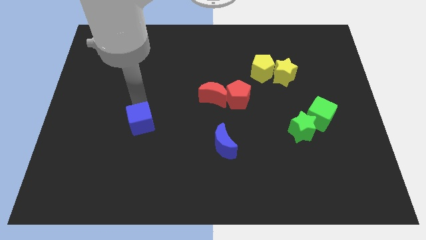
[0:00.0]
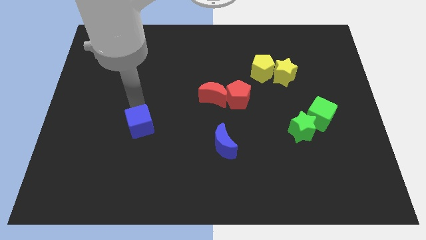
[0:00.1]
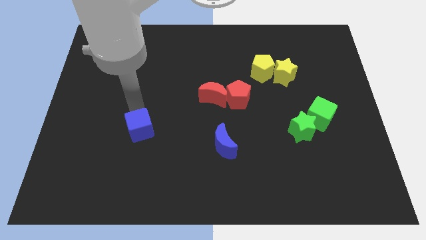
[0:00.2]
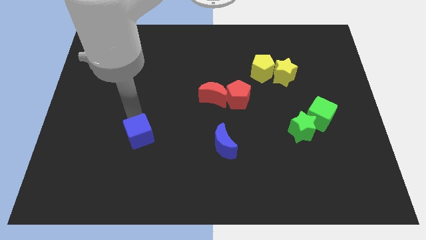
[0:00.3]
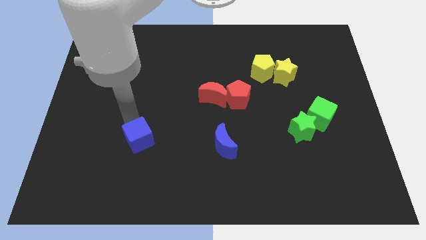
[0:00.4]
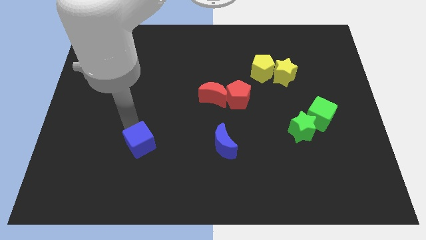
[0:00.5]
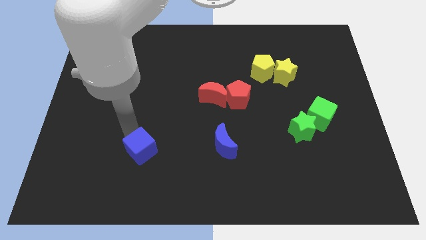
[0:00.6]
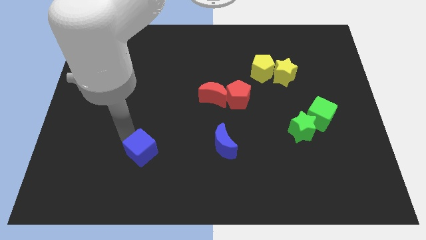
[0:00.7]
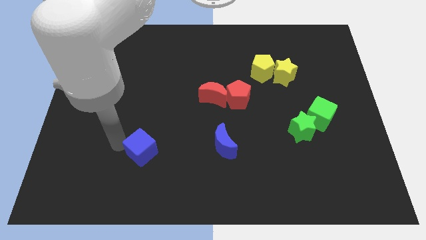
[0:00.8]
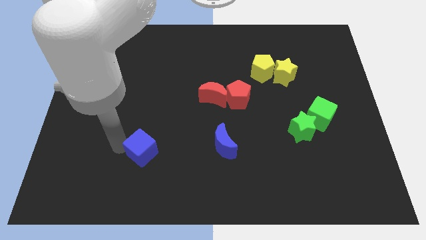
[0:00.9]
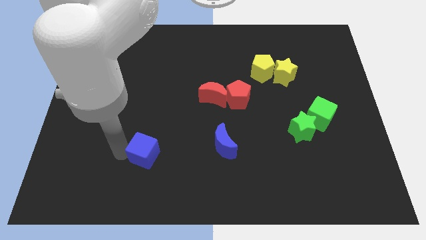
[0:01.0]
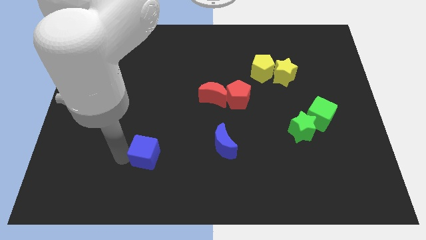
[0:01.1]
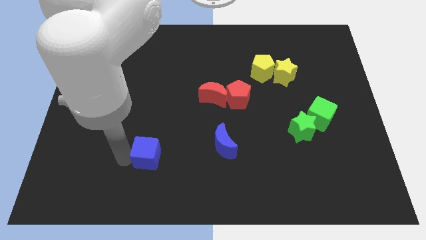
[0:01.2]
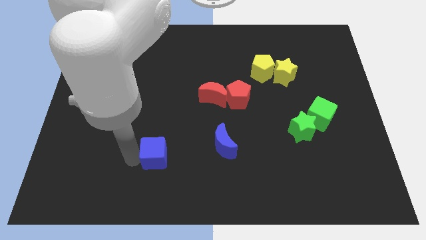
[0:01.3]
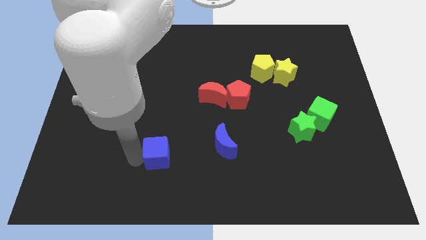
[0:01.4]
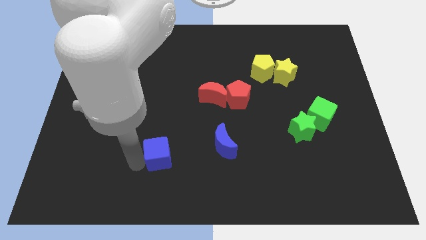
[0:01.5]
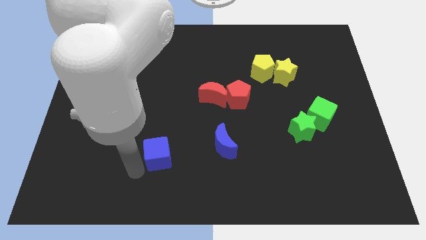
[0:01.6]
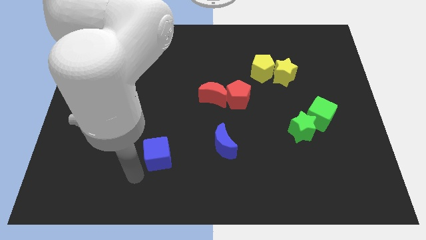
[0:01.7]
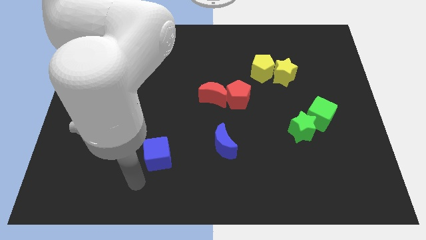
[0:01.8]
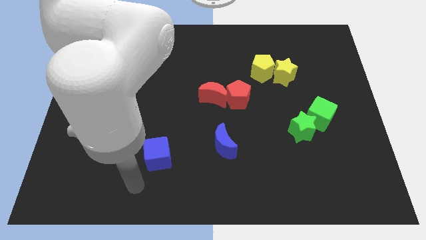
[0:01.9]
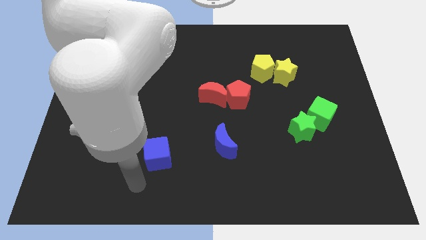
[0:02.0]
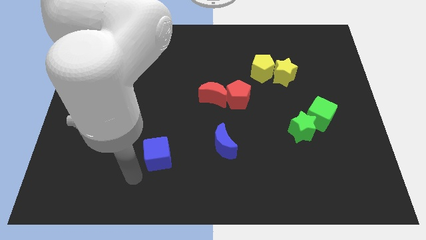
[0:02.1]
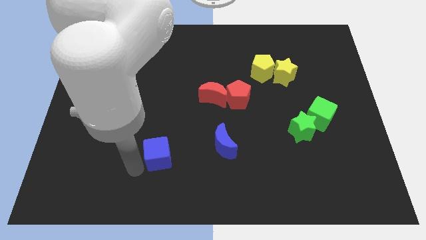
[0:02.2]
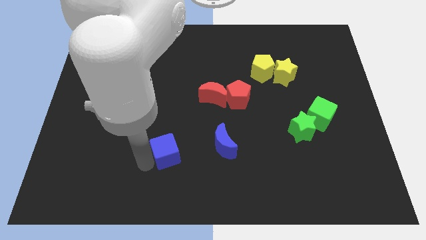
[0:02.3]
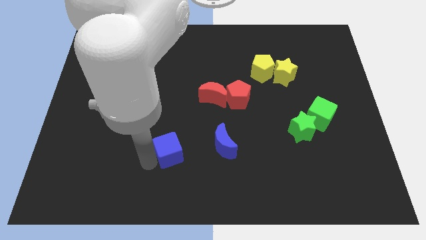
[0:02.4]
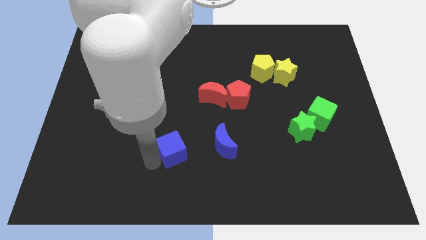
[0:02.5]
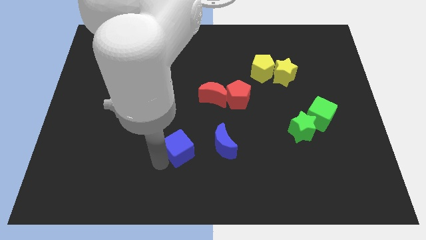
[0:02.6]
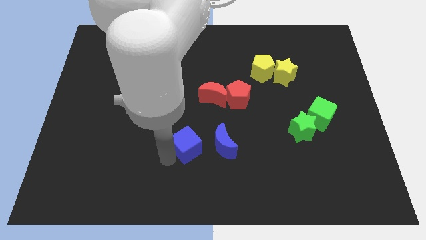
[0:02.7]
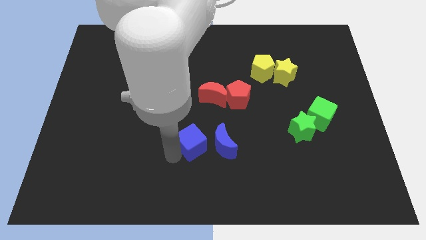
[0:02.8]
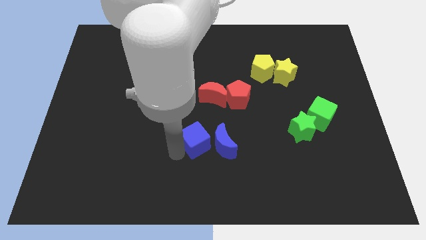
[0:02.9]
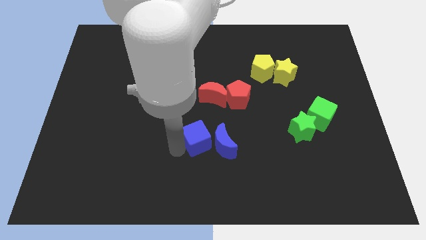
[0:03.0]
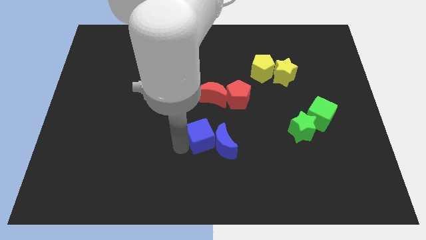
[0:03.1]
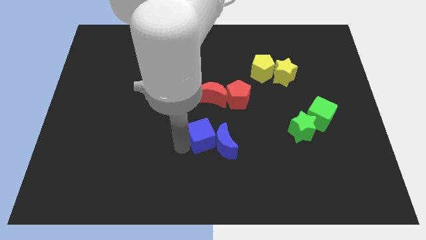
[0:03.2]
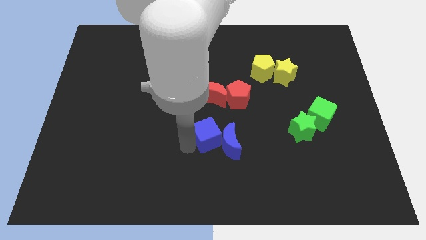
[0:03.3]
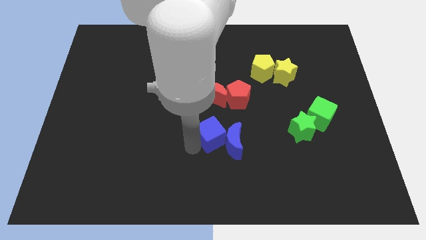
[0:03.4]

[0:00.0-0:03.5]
move the blue cube into the blue moon

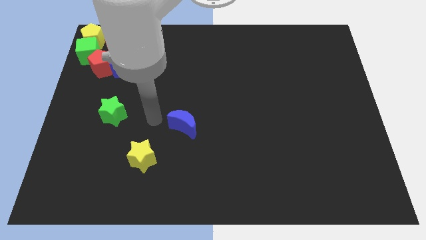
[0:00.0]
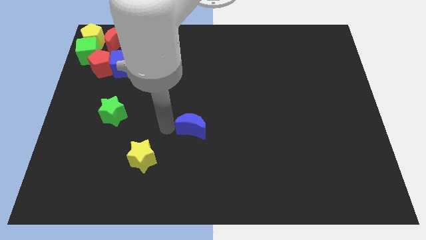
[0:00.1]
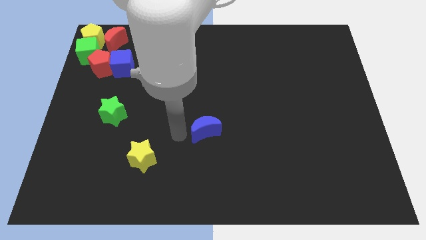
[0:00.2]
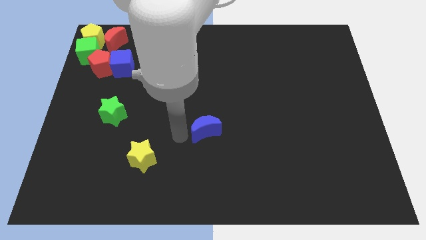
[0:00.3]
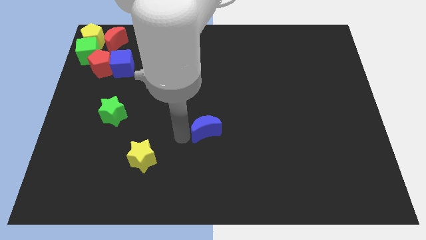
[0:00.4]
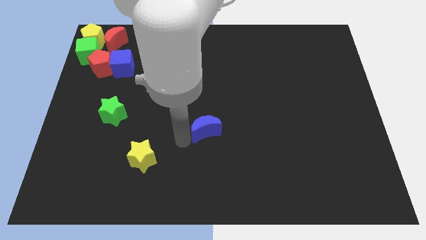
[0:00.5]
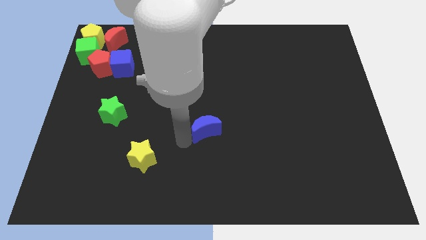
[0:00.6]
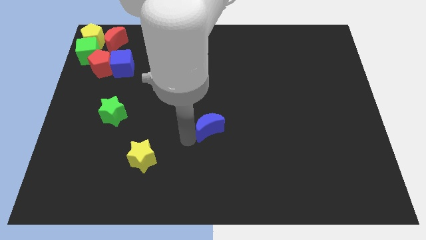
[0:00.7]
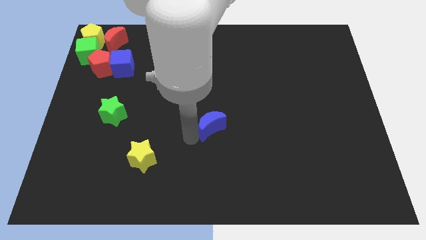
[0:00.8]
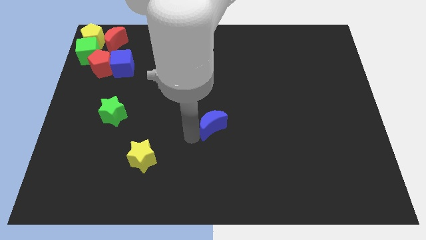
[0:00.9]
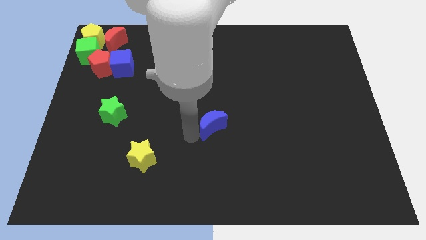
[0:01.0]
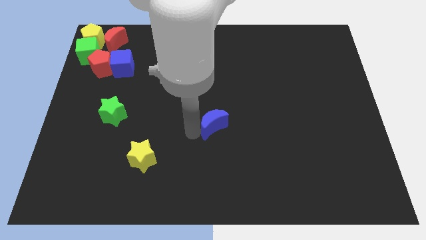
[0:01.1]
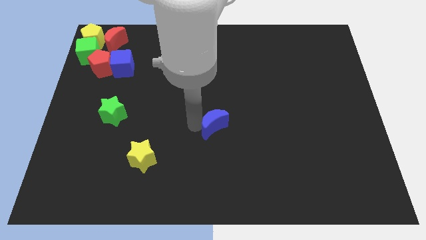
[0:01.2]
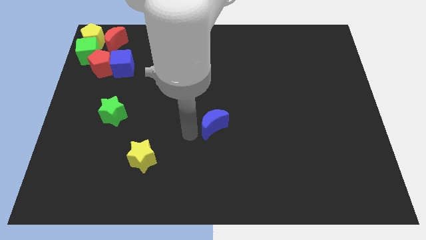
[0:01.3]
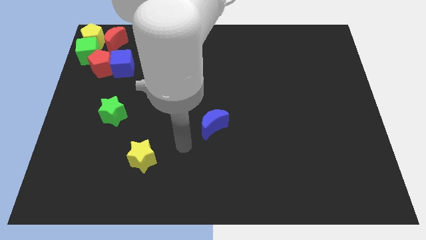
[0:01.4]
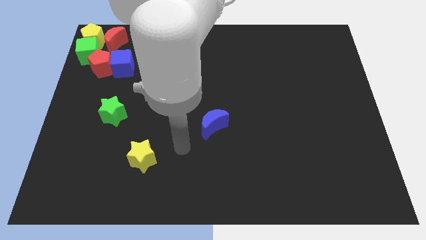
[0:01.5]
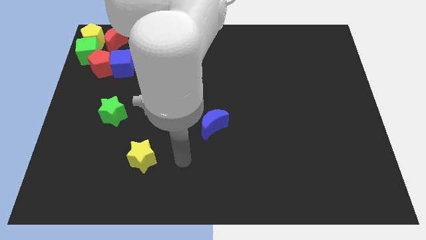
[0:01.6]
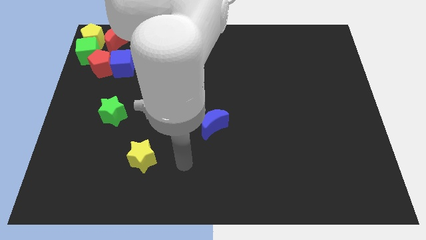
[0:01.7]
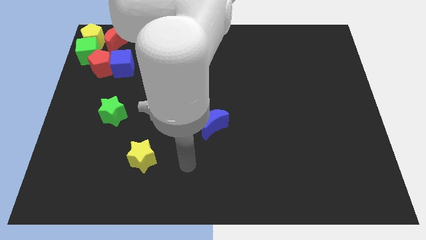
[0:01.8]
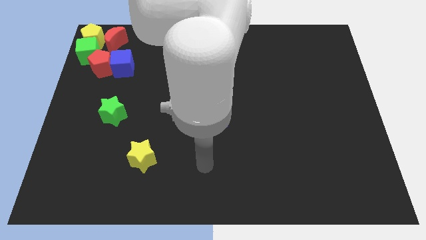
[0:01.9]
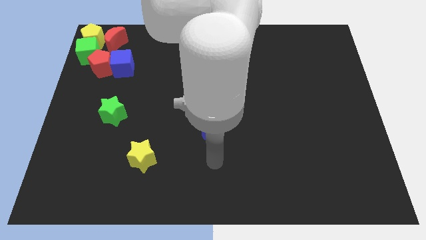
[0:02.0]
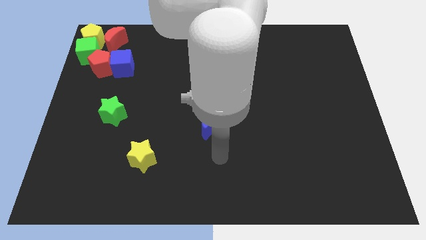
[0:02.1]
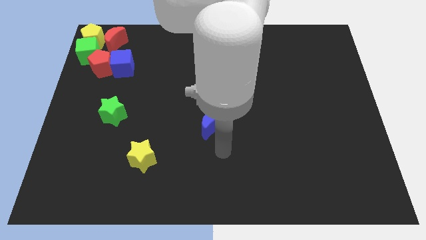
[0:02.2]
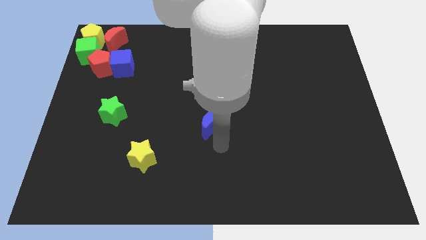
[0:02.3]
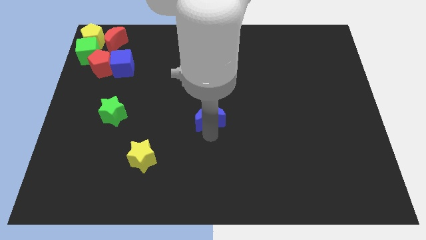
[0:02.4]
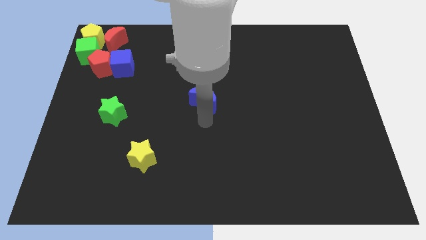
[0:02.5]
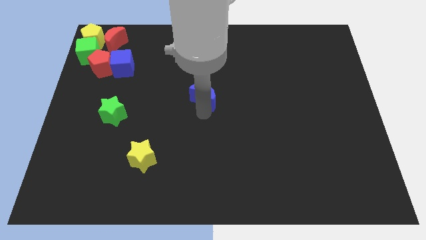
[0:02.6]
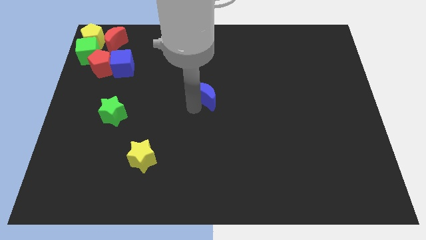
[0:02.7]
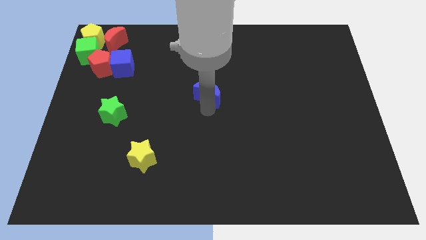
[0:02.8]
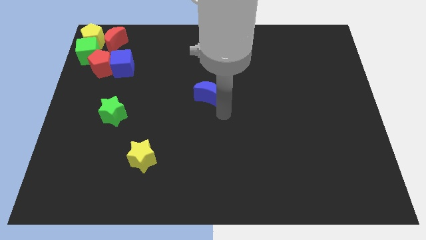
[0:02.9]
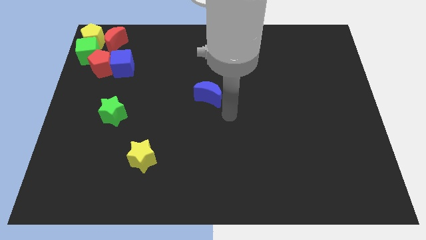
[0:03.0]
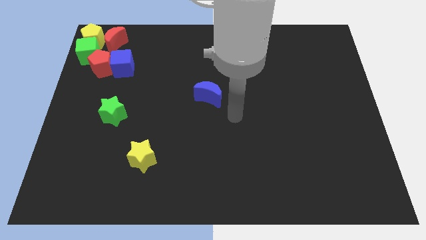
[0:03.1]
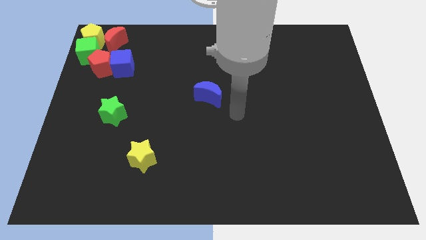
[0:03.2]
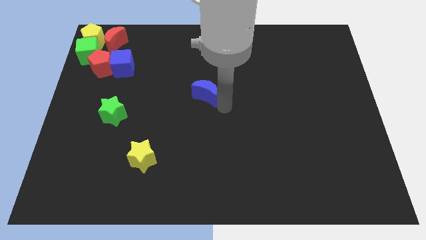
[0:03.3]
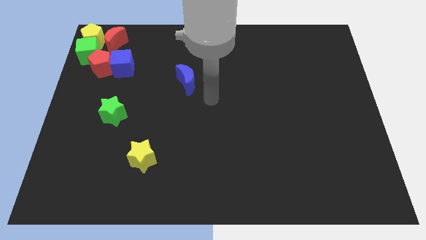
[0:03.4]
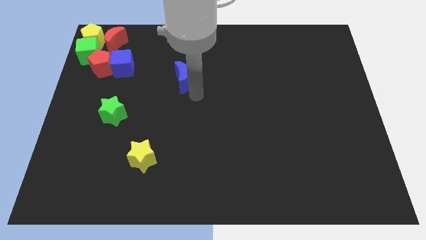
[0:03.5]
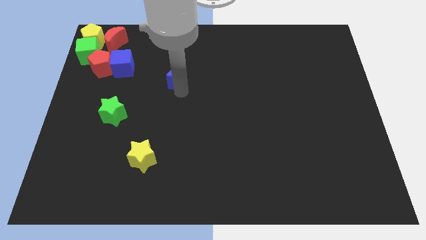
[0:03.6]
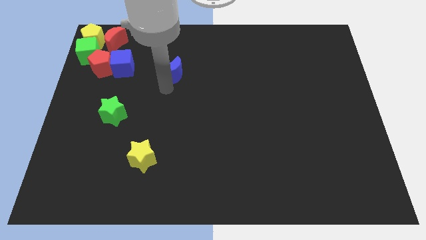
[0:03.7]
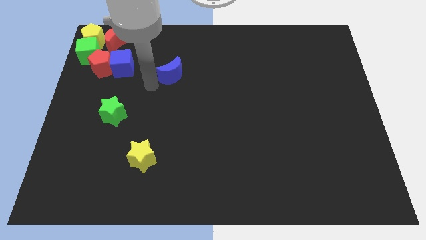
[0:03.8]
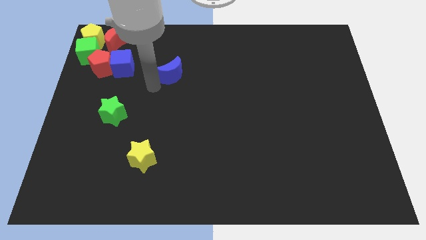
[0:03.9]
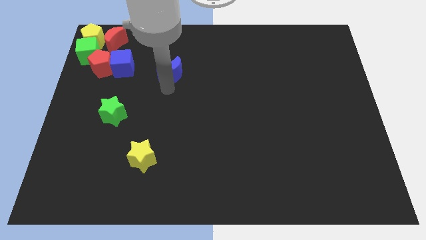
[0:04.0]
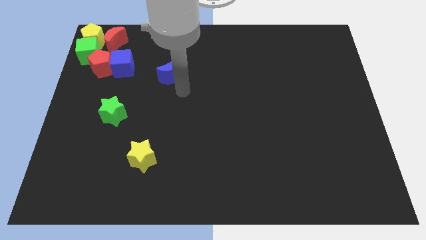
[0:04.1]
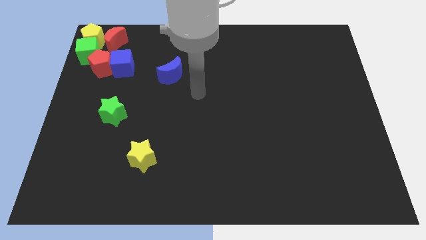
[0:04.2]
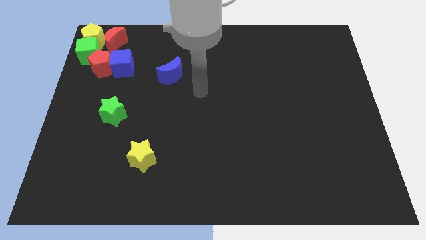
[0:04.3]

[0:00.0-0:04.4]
push the blue crescent to the right of the blue cube

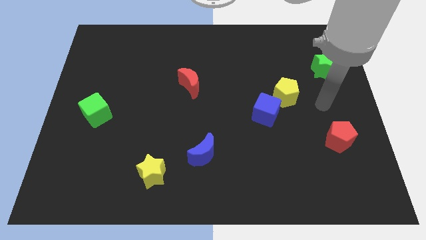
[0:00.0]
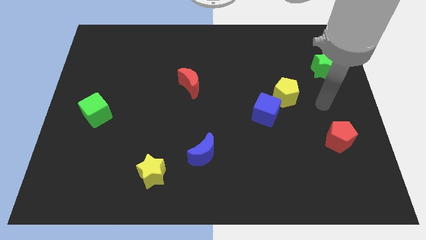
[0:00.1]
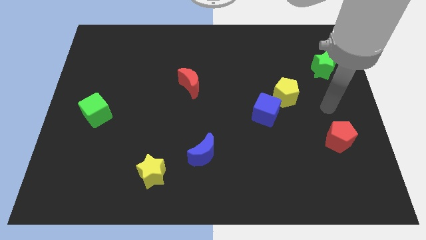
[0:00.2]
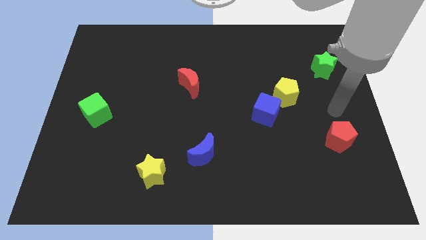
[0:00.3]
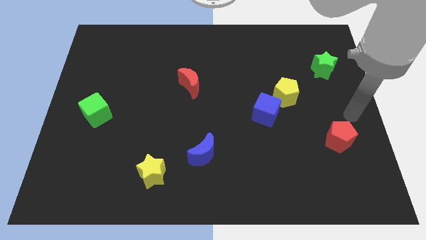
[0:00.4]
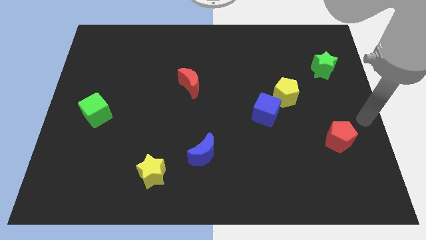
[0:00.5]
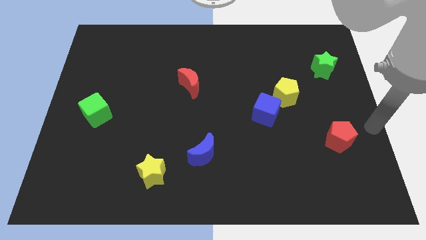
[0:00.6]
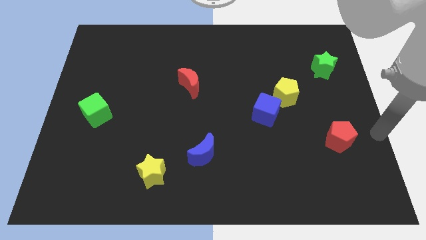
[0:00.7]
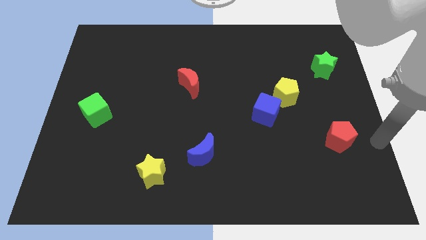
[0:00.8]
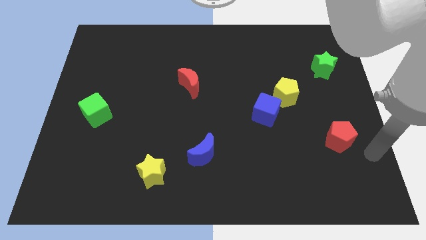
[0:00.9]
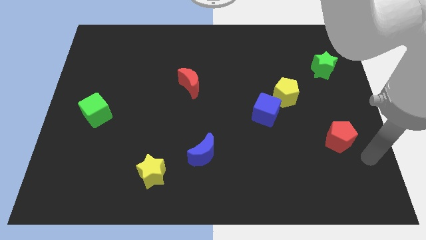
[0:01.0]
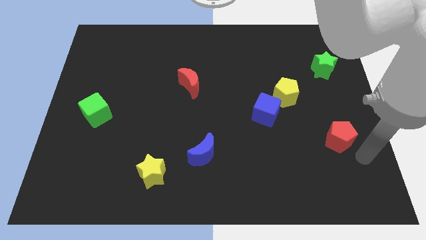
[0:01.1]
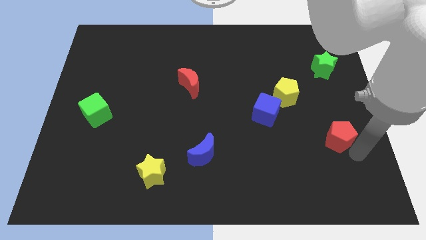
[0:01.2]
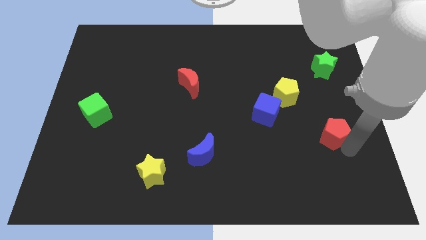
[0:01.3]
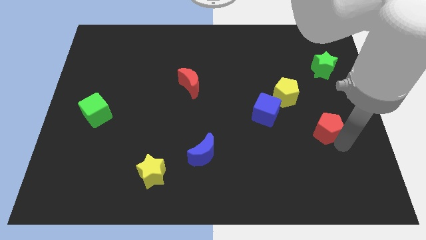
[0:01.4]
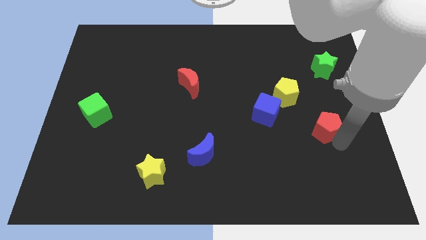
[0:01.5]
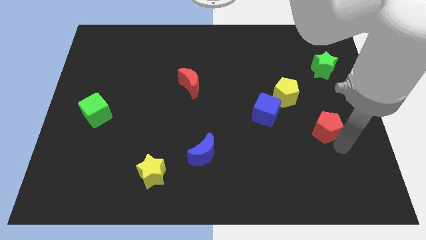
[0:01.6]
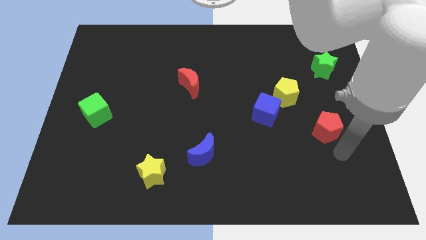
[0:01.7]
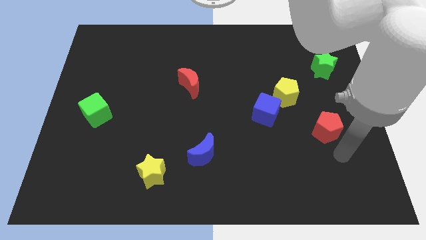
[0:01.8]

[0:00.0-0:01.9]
push the red pentagon towards the yellow pentagon
